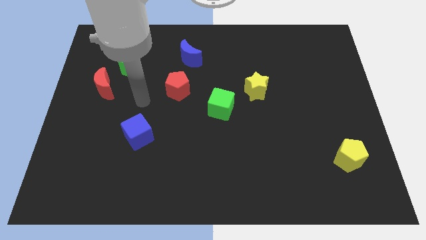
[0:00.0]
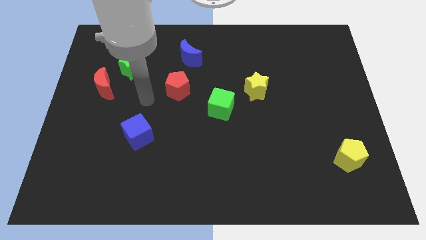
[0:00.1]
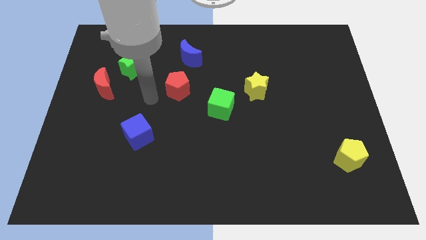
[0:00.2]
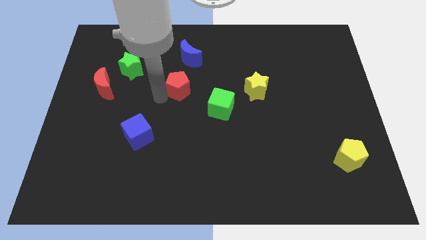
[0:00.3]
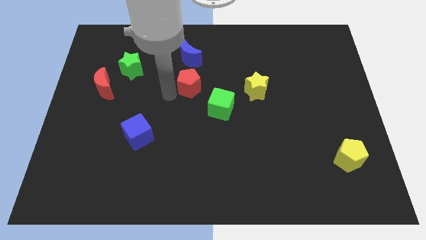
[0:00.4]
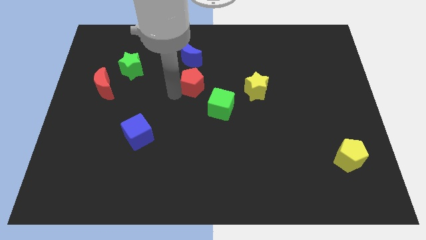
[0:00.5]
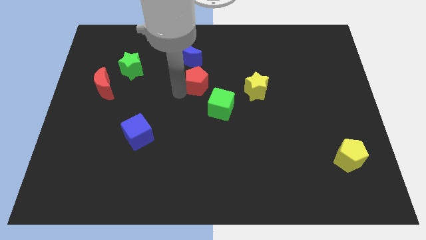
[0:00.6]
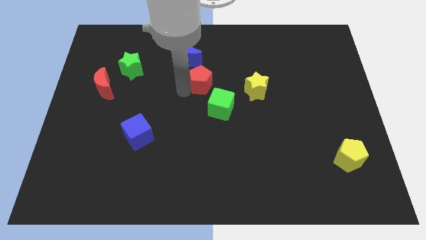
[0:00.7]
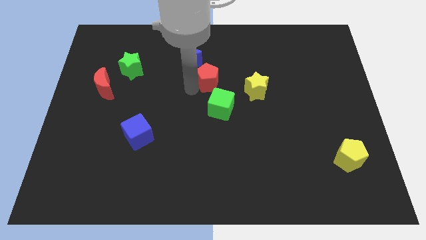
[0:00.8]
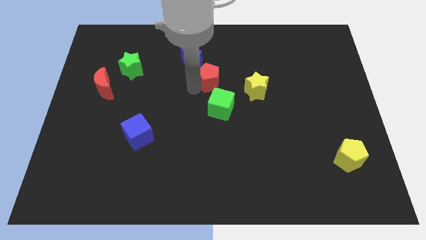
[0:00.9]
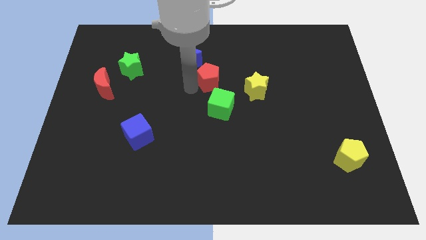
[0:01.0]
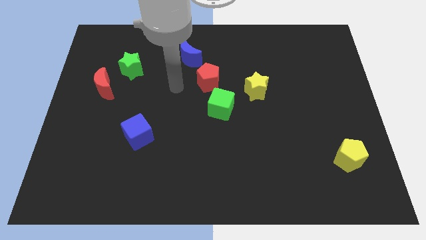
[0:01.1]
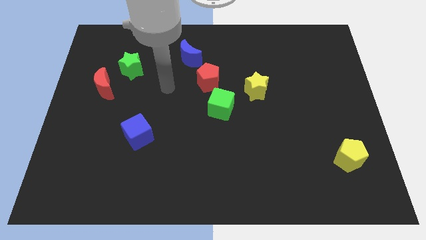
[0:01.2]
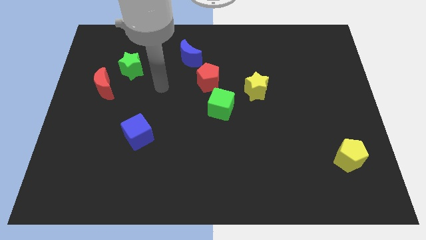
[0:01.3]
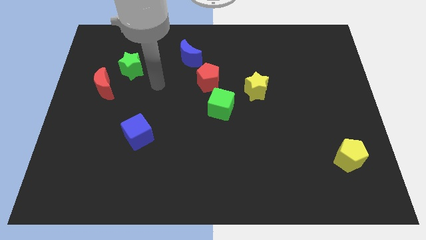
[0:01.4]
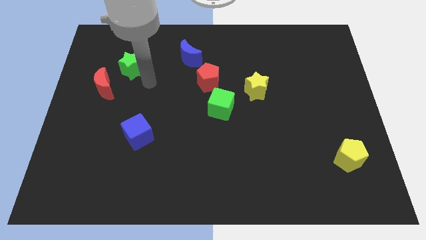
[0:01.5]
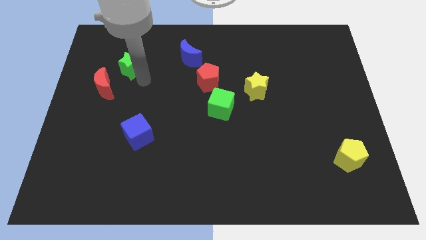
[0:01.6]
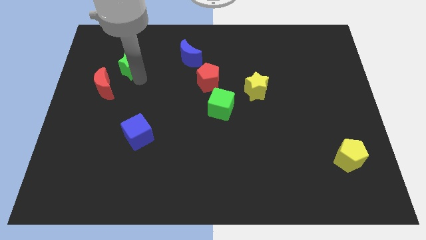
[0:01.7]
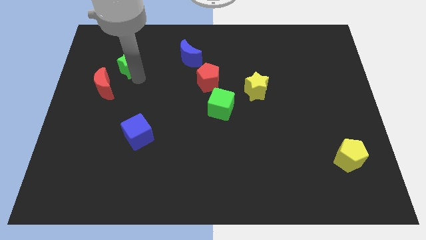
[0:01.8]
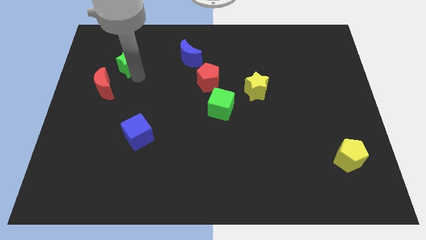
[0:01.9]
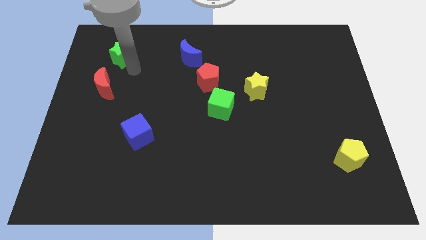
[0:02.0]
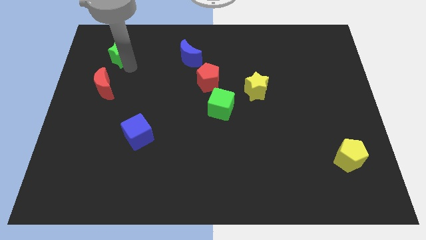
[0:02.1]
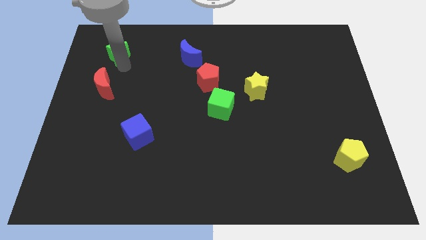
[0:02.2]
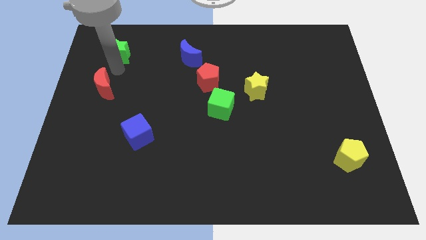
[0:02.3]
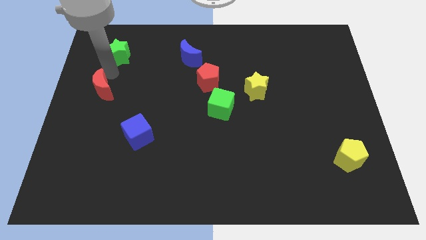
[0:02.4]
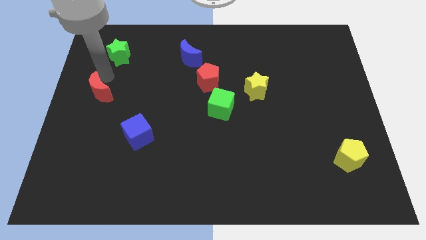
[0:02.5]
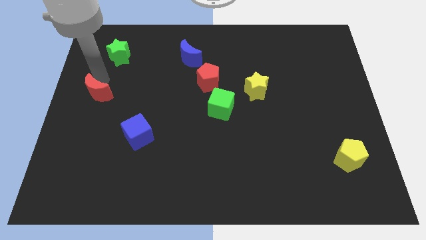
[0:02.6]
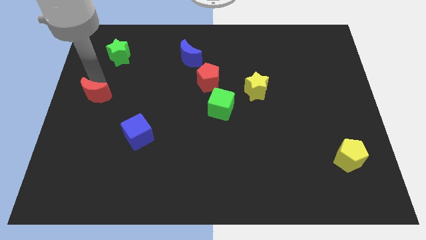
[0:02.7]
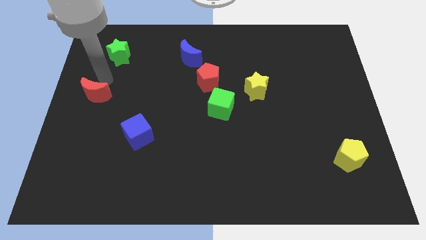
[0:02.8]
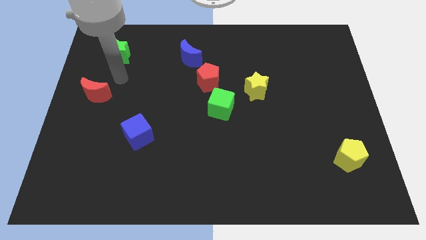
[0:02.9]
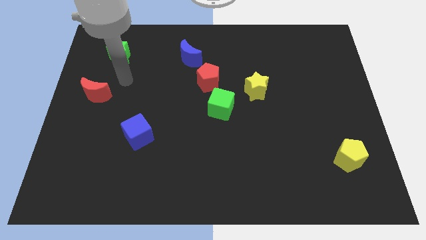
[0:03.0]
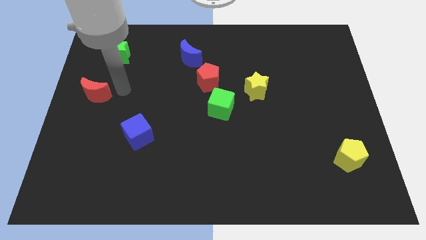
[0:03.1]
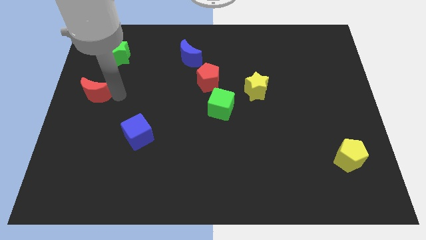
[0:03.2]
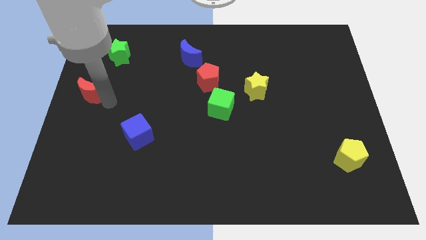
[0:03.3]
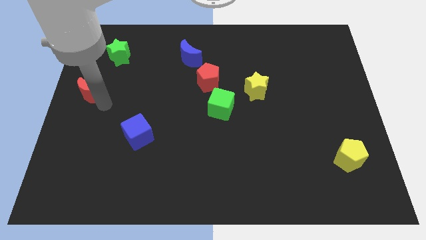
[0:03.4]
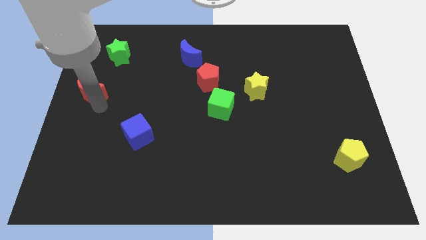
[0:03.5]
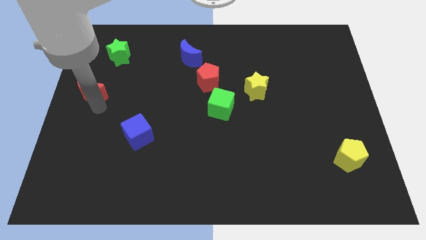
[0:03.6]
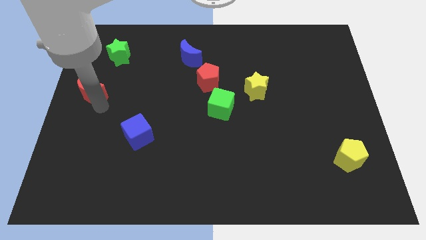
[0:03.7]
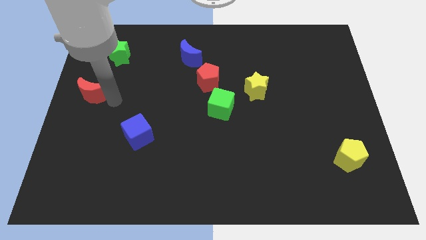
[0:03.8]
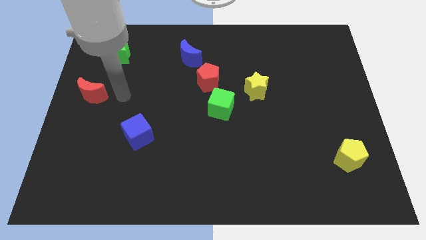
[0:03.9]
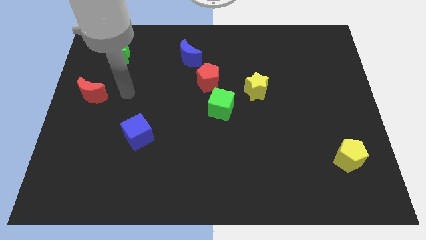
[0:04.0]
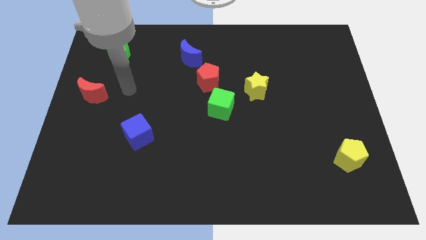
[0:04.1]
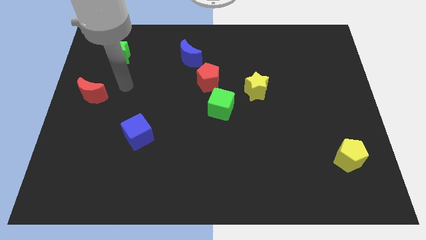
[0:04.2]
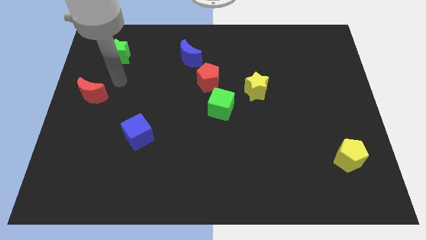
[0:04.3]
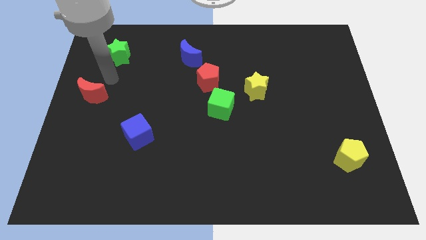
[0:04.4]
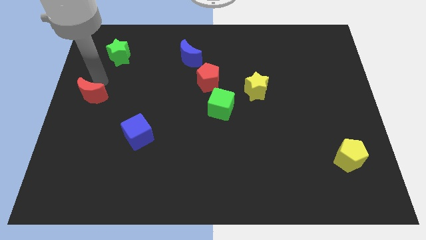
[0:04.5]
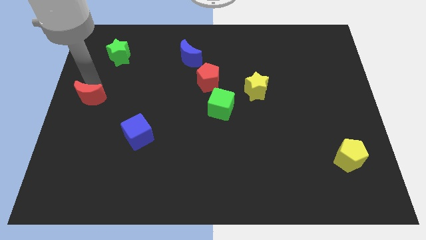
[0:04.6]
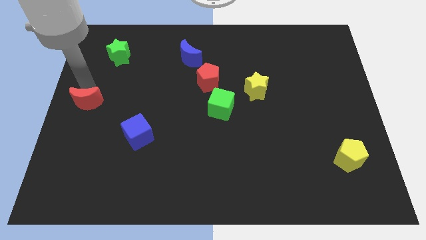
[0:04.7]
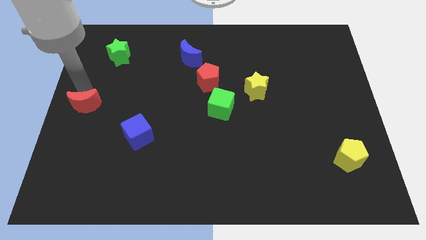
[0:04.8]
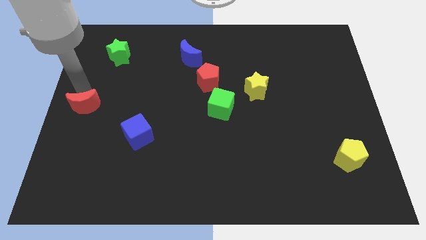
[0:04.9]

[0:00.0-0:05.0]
push the red crescent to the left center

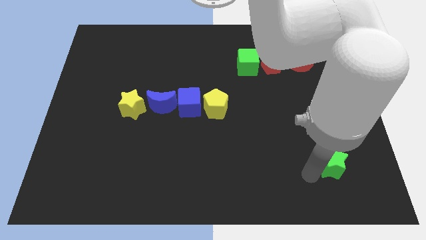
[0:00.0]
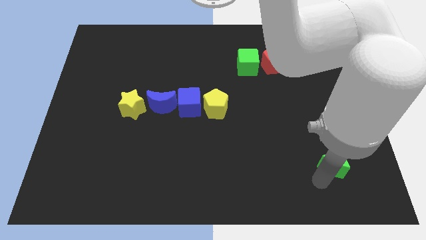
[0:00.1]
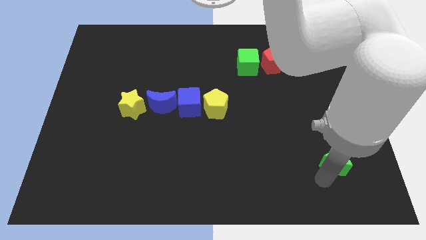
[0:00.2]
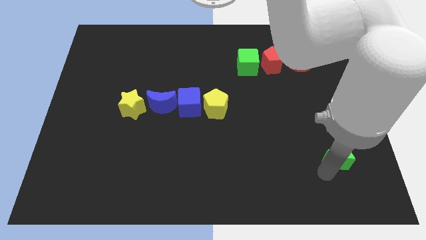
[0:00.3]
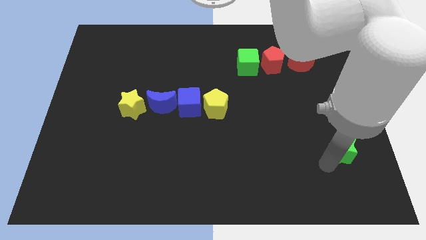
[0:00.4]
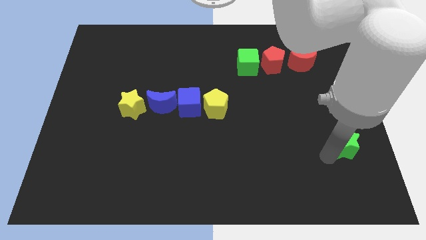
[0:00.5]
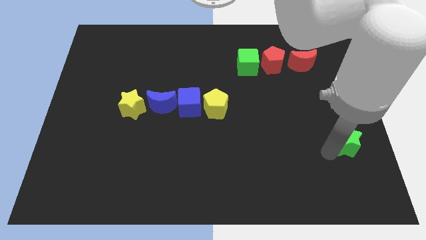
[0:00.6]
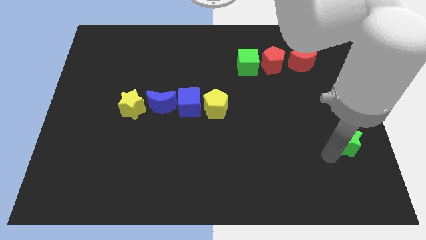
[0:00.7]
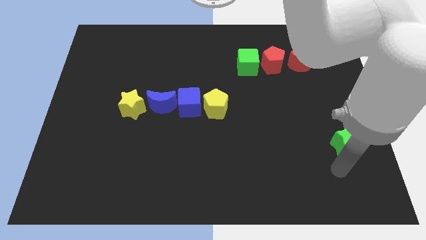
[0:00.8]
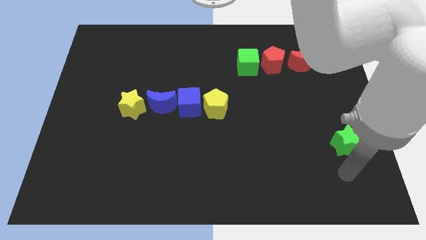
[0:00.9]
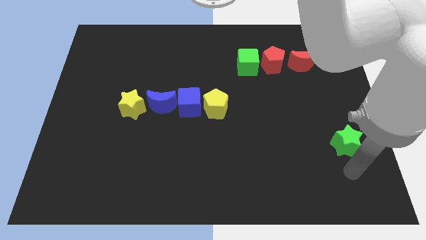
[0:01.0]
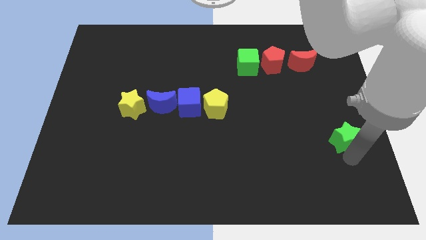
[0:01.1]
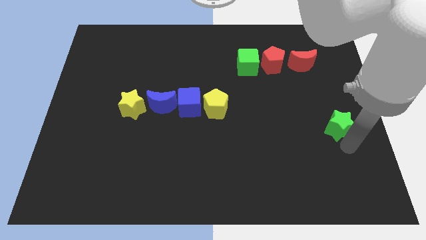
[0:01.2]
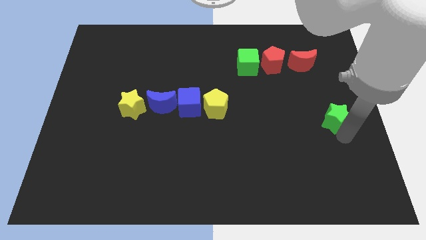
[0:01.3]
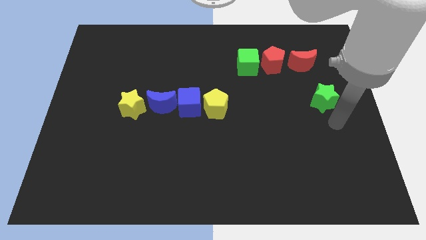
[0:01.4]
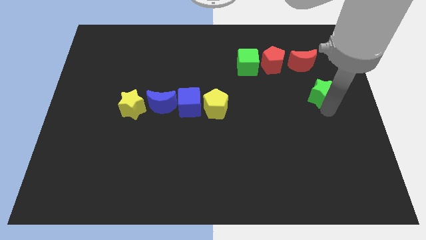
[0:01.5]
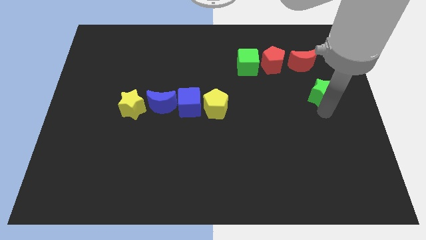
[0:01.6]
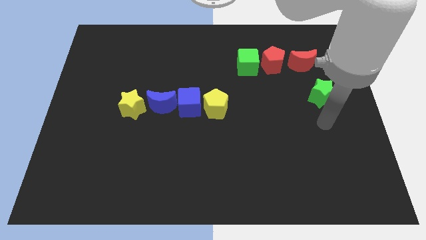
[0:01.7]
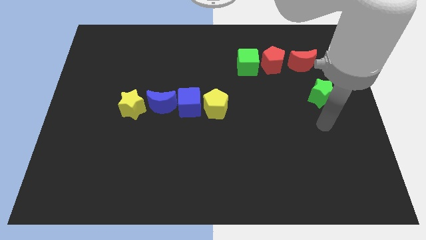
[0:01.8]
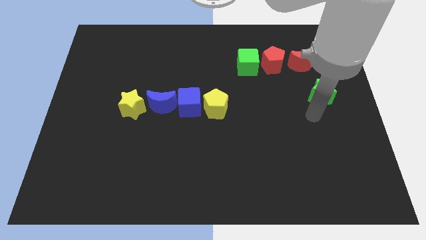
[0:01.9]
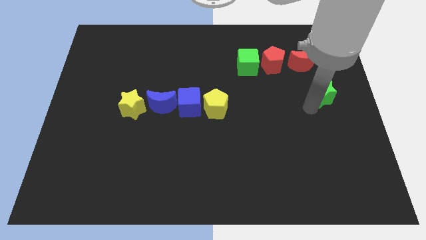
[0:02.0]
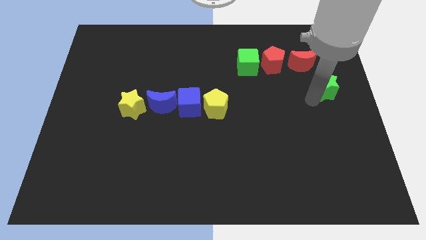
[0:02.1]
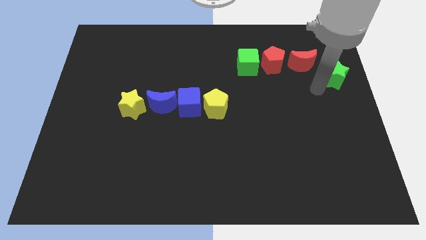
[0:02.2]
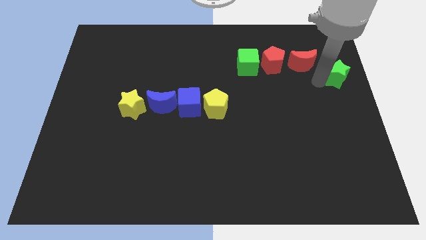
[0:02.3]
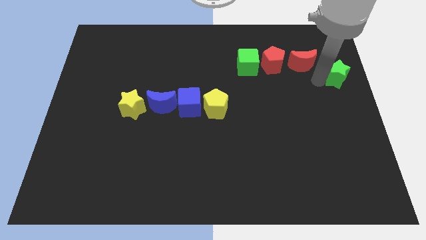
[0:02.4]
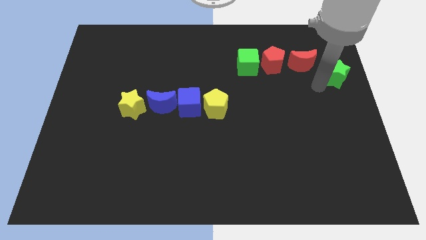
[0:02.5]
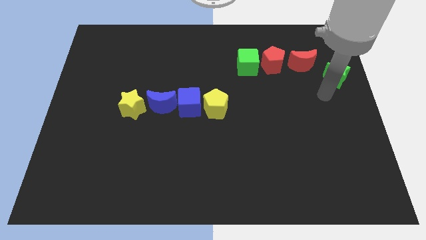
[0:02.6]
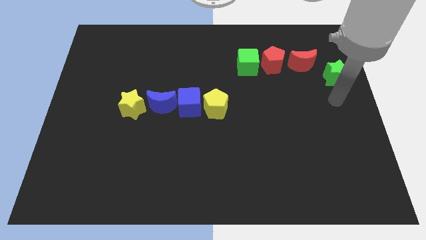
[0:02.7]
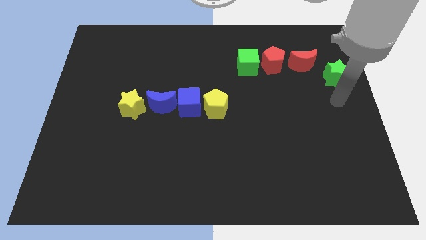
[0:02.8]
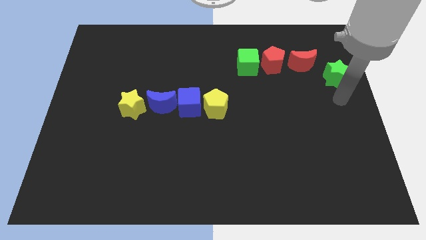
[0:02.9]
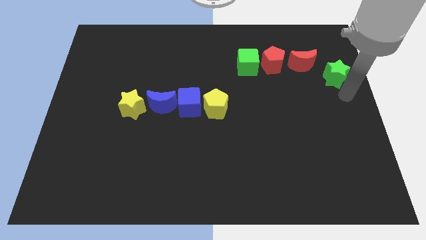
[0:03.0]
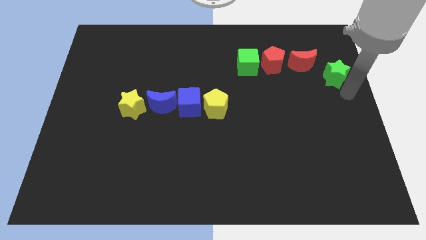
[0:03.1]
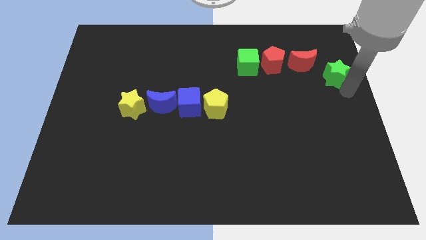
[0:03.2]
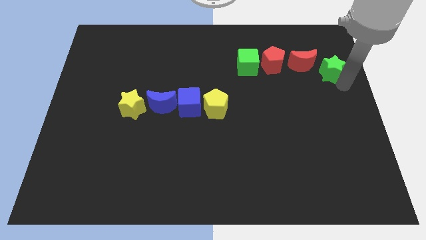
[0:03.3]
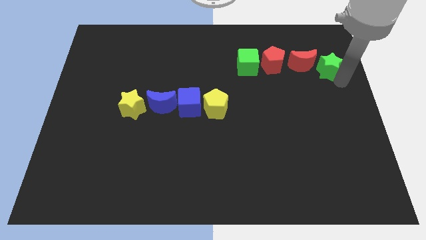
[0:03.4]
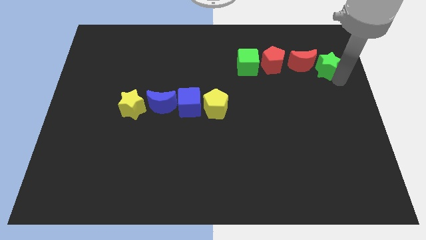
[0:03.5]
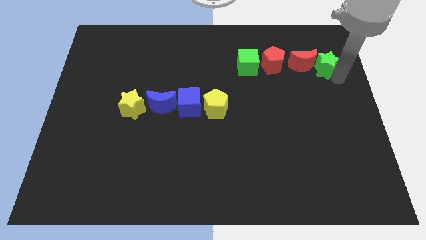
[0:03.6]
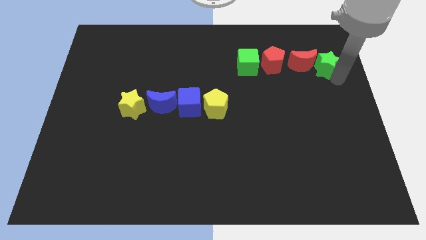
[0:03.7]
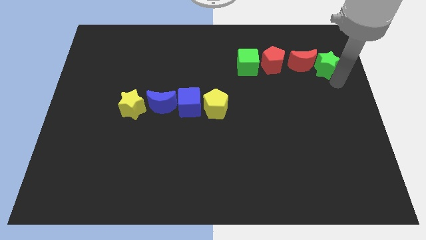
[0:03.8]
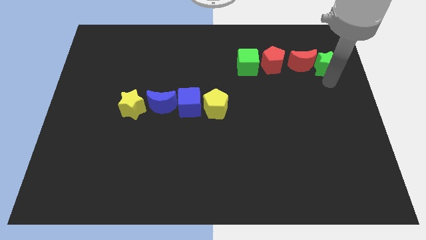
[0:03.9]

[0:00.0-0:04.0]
place the green star right side of the red crescent

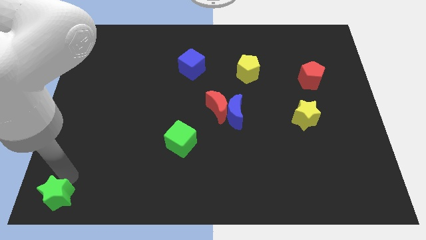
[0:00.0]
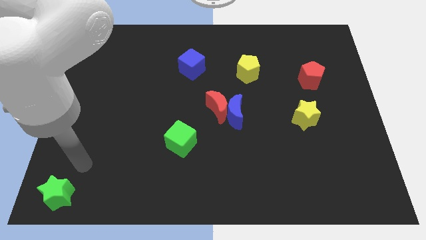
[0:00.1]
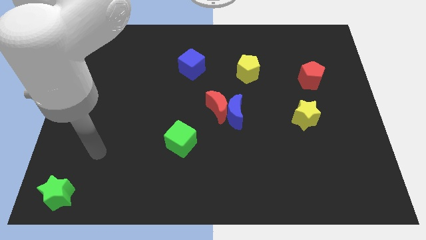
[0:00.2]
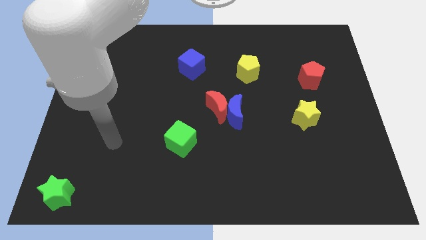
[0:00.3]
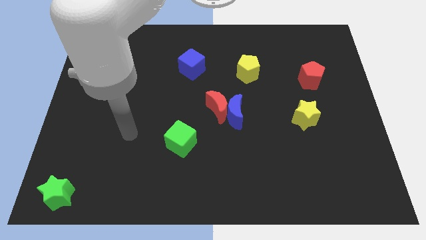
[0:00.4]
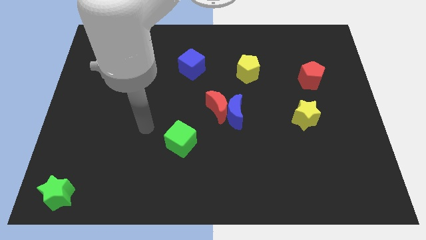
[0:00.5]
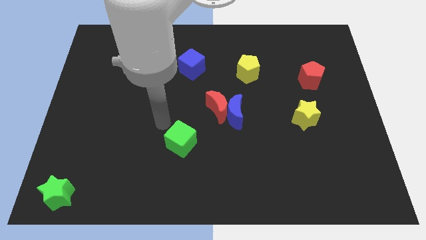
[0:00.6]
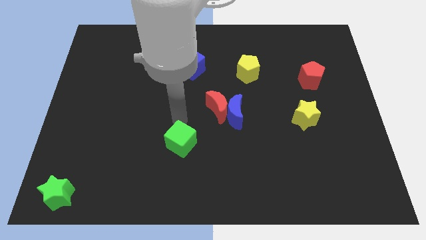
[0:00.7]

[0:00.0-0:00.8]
move your arm in between the green cube and the red crescent
